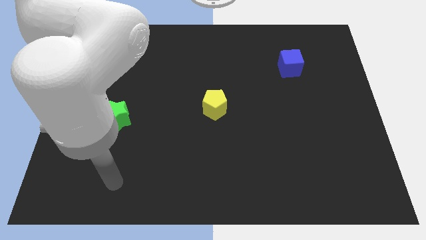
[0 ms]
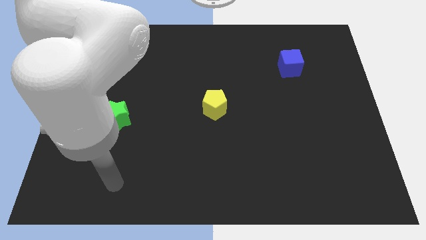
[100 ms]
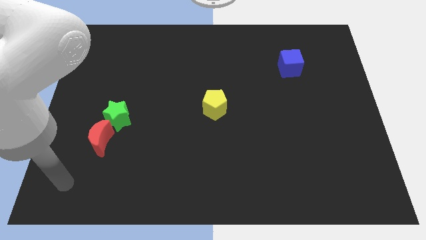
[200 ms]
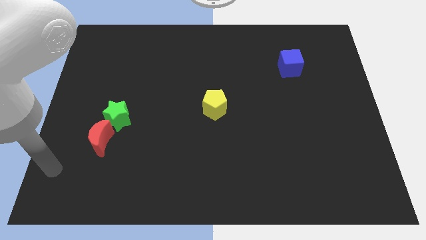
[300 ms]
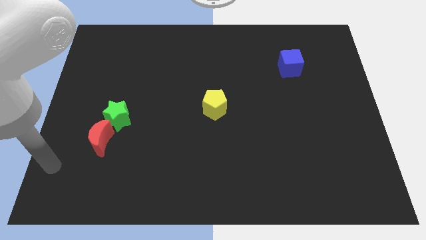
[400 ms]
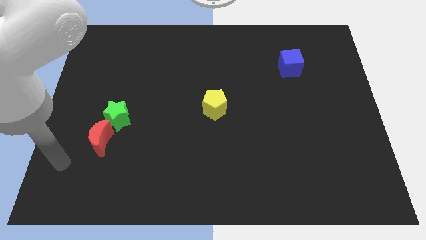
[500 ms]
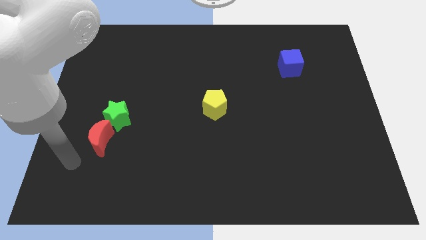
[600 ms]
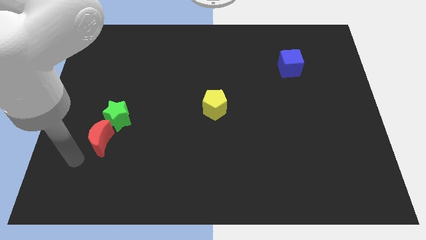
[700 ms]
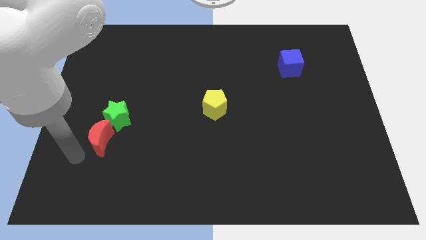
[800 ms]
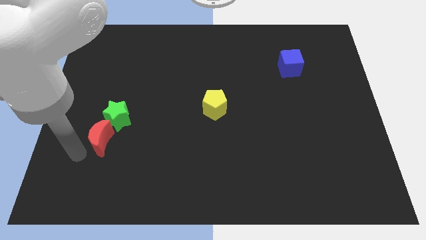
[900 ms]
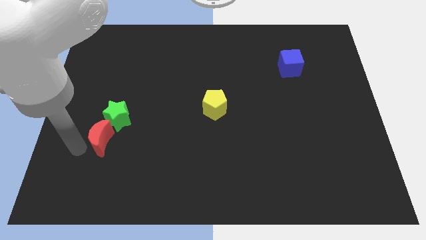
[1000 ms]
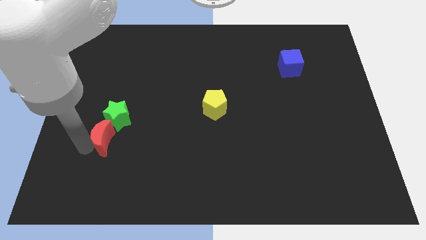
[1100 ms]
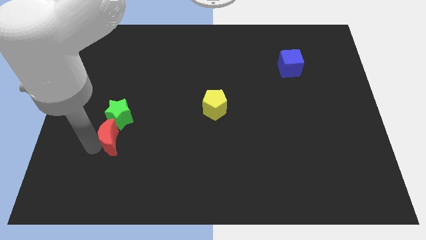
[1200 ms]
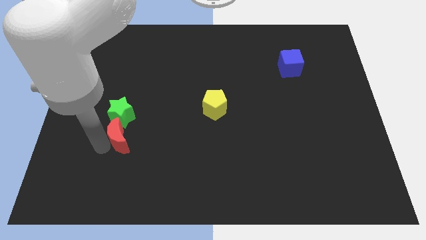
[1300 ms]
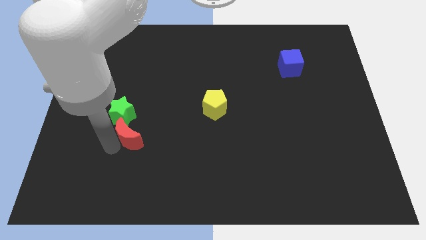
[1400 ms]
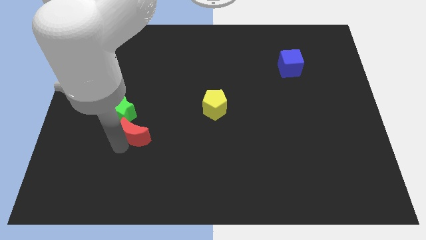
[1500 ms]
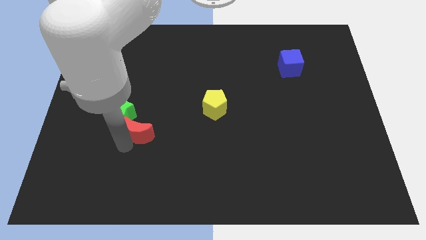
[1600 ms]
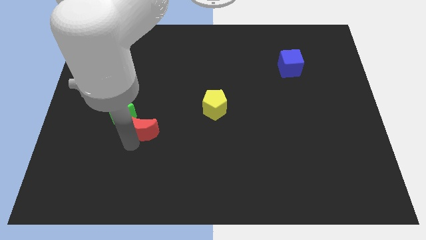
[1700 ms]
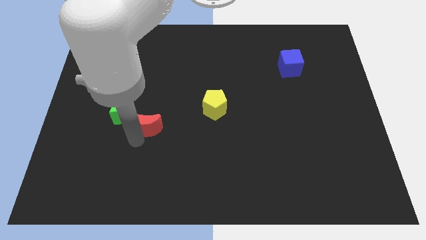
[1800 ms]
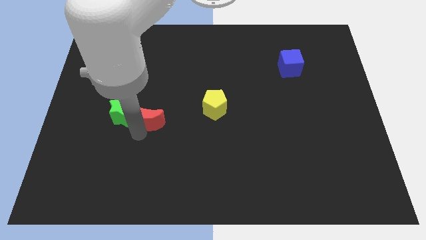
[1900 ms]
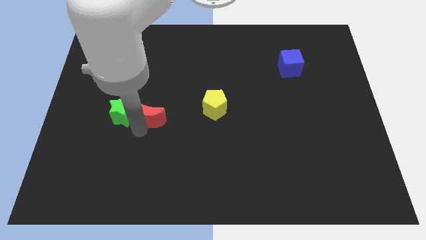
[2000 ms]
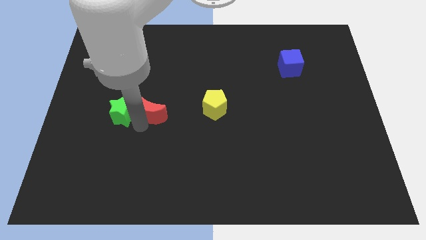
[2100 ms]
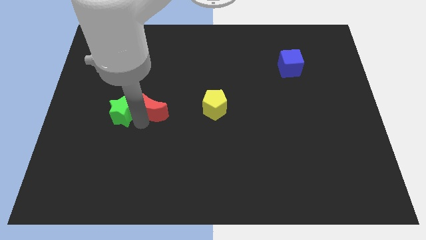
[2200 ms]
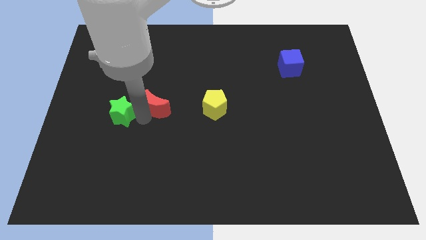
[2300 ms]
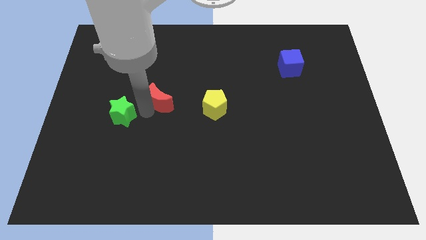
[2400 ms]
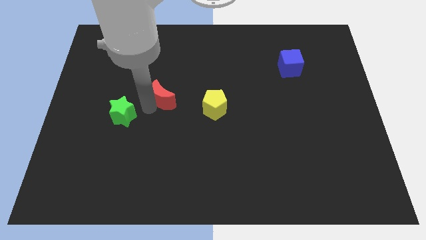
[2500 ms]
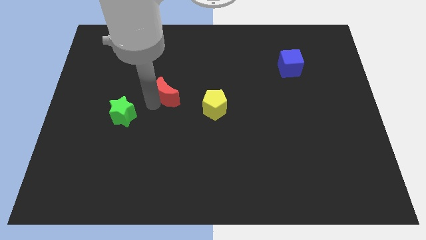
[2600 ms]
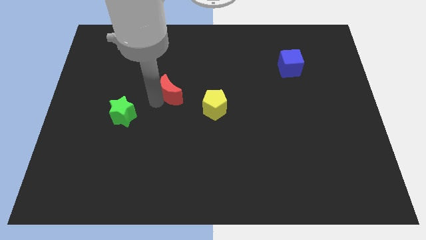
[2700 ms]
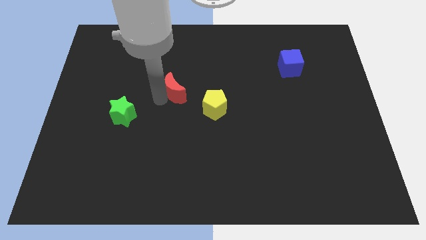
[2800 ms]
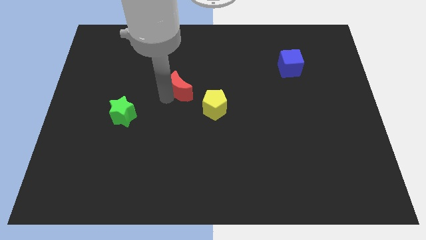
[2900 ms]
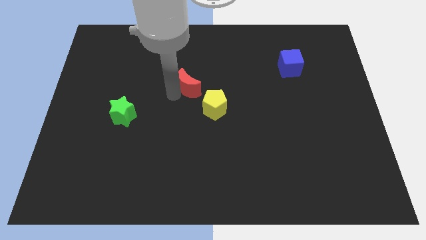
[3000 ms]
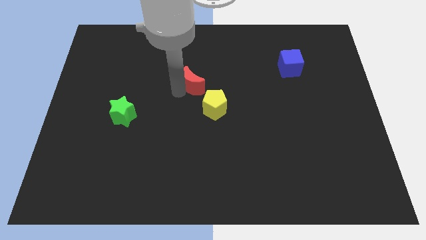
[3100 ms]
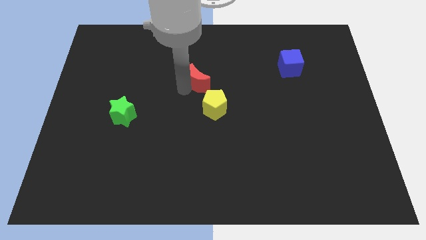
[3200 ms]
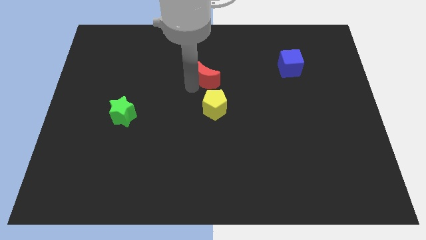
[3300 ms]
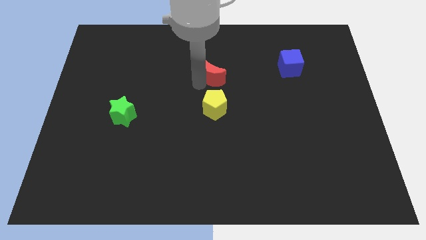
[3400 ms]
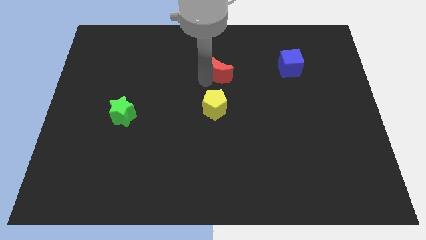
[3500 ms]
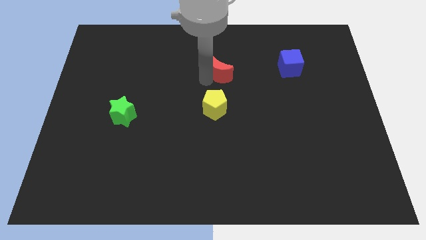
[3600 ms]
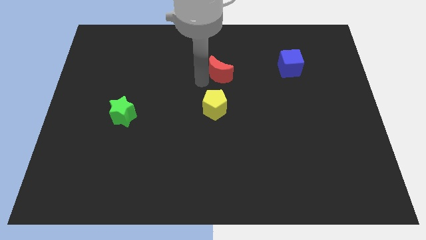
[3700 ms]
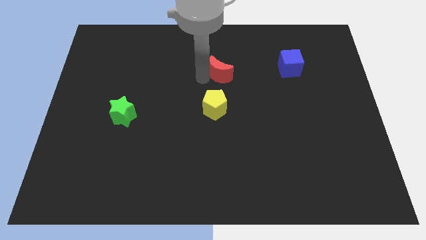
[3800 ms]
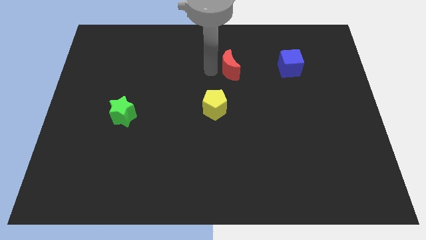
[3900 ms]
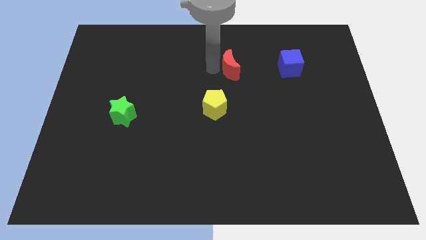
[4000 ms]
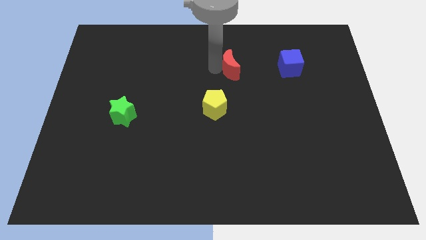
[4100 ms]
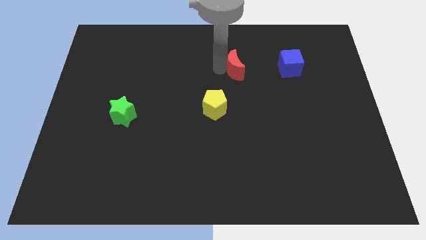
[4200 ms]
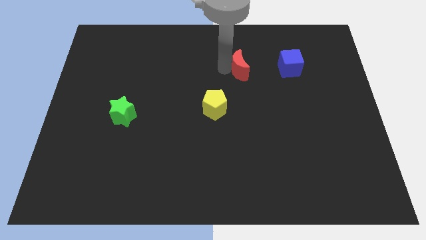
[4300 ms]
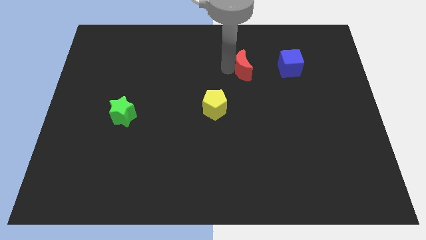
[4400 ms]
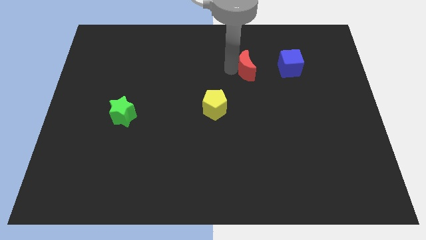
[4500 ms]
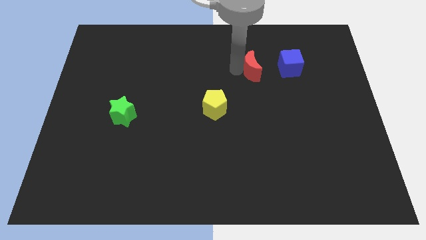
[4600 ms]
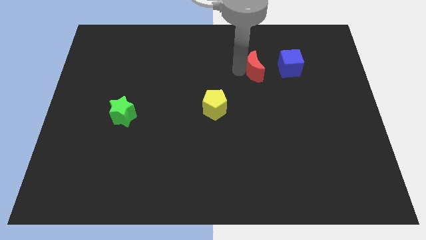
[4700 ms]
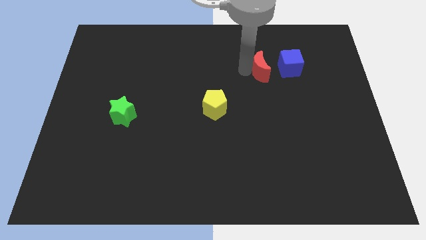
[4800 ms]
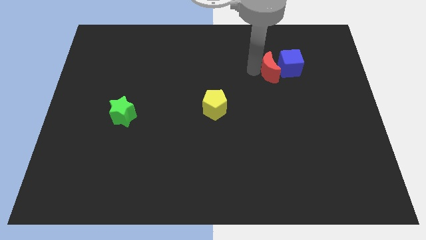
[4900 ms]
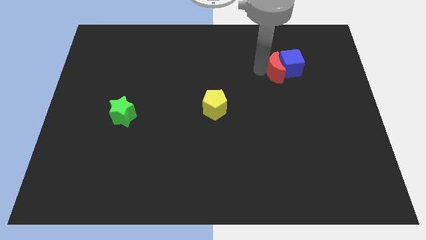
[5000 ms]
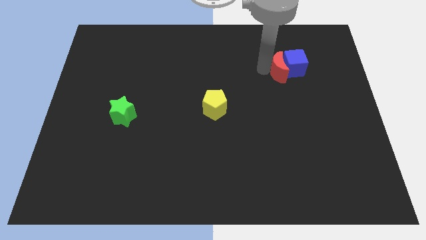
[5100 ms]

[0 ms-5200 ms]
slide the red block close to the cube

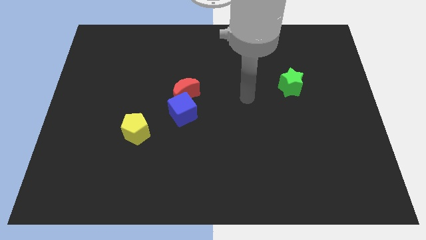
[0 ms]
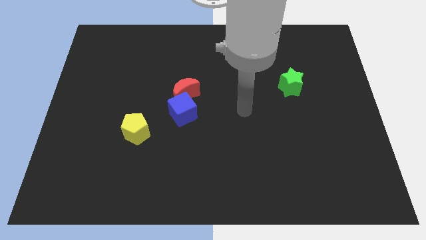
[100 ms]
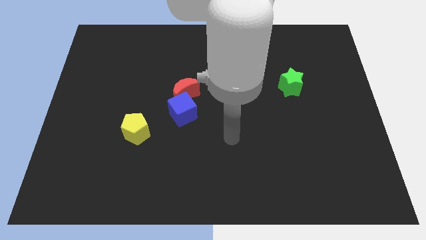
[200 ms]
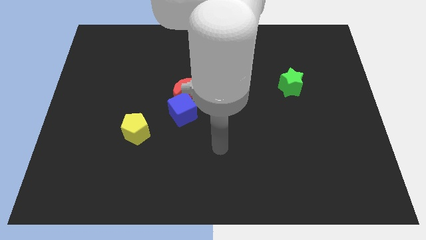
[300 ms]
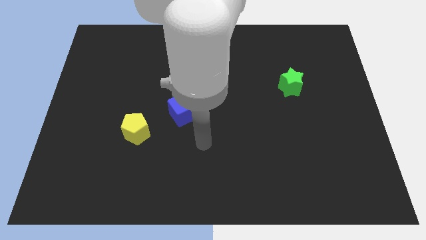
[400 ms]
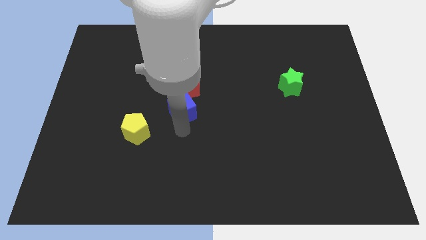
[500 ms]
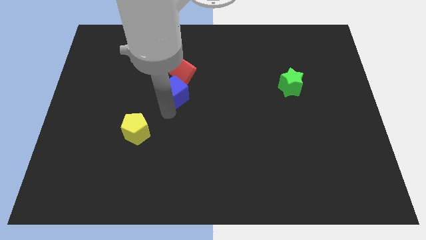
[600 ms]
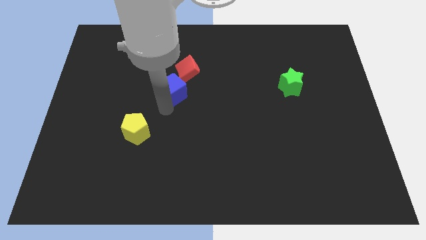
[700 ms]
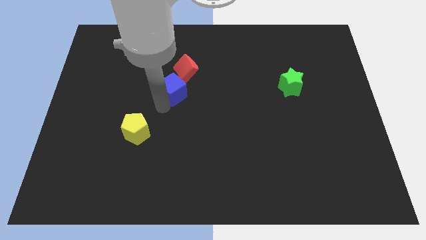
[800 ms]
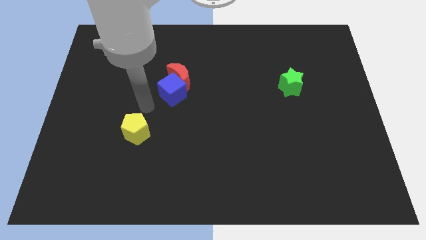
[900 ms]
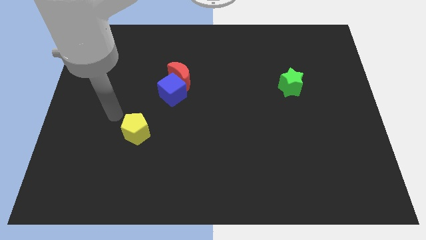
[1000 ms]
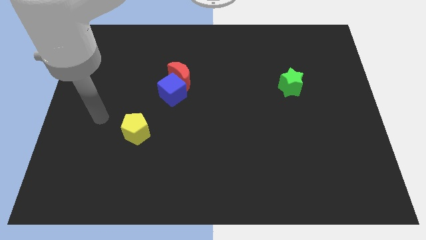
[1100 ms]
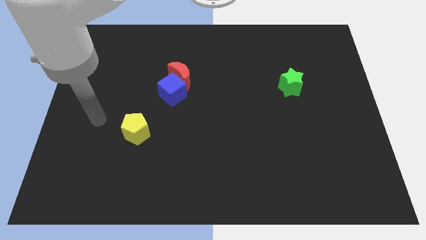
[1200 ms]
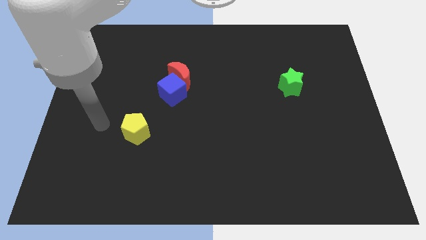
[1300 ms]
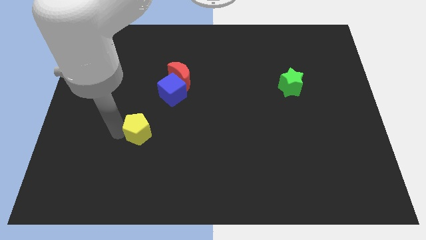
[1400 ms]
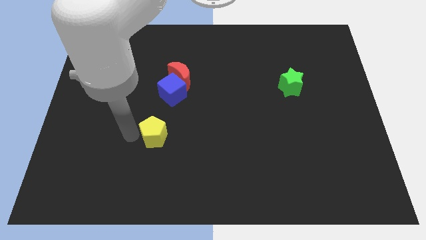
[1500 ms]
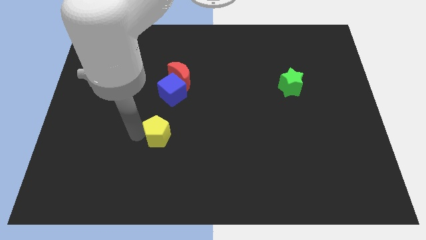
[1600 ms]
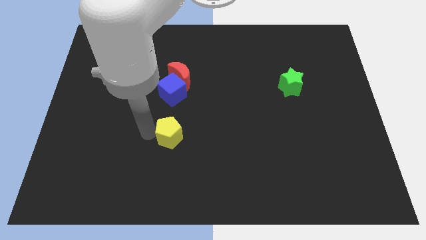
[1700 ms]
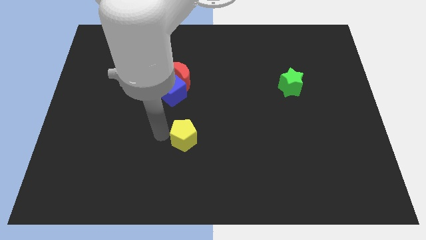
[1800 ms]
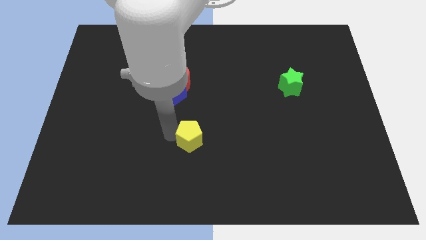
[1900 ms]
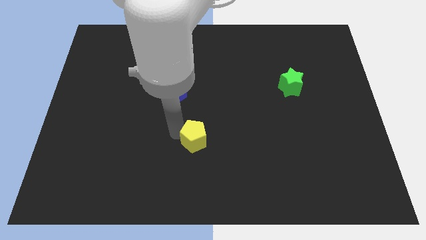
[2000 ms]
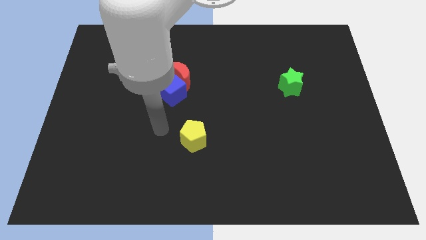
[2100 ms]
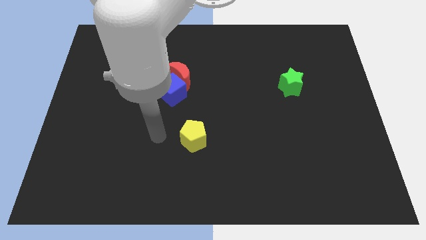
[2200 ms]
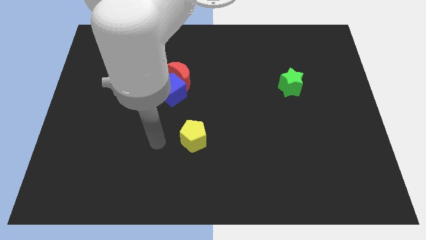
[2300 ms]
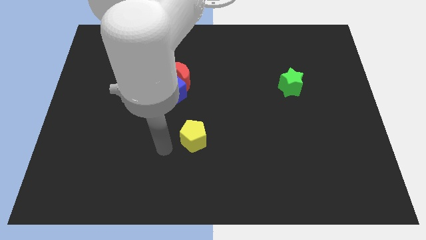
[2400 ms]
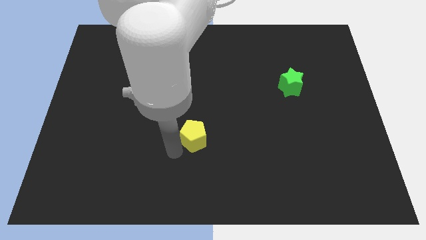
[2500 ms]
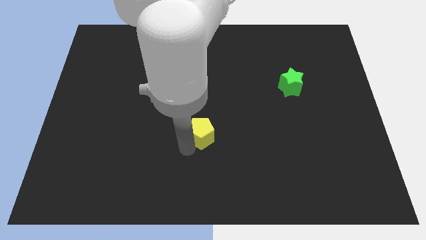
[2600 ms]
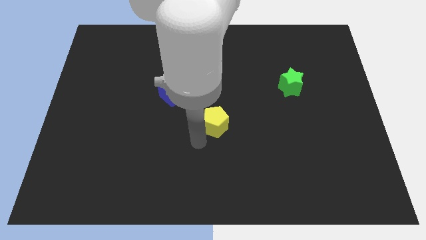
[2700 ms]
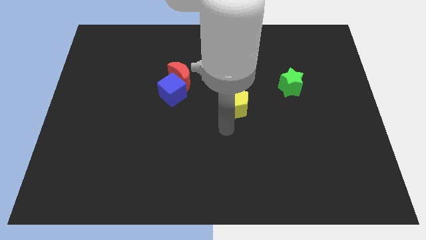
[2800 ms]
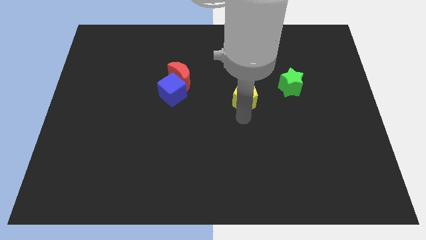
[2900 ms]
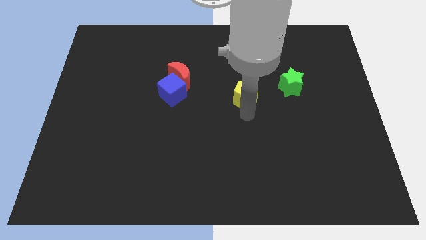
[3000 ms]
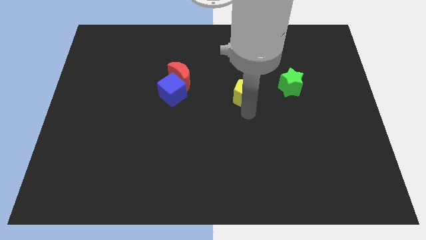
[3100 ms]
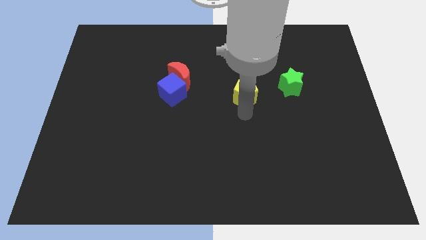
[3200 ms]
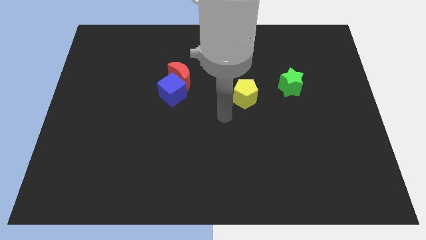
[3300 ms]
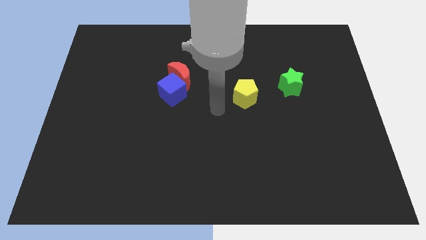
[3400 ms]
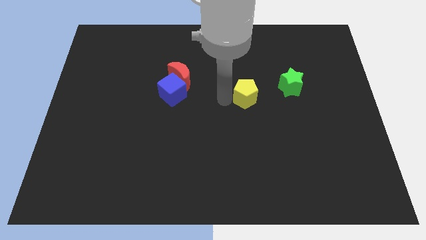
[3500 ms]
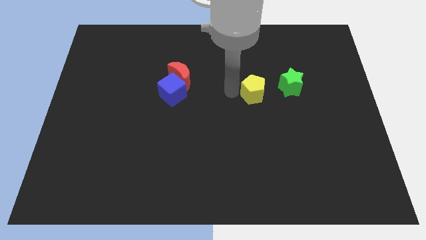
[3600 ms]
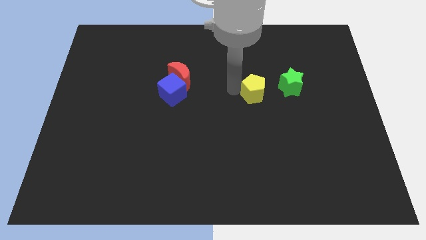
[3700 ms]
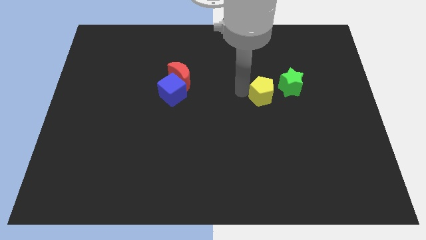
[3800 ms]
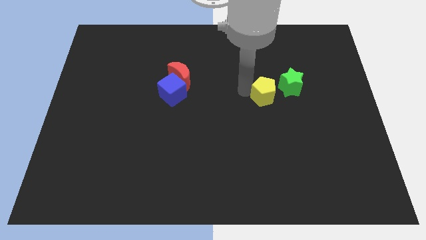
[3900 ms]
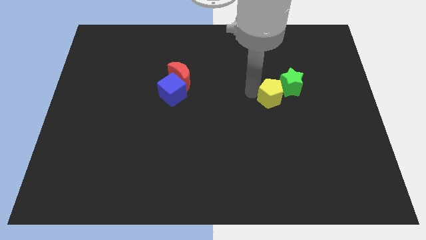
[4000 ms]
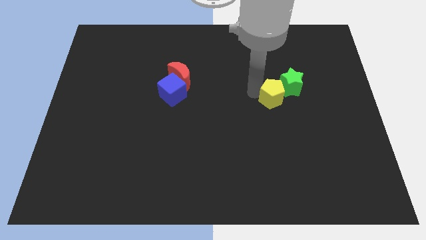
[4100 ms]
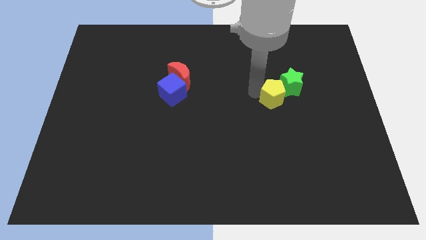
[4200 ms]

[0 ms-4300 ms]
slide the pentagon close to the green star
